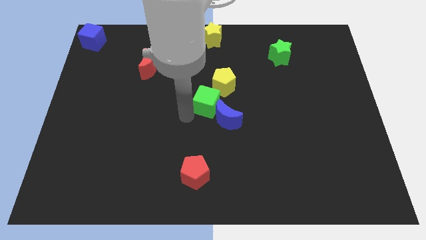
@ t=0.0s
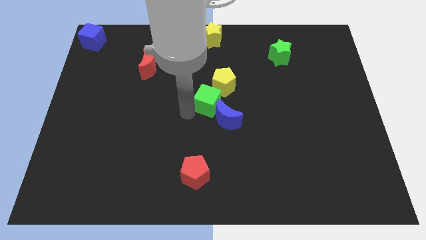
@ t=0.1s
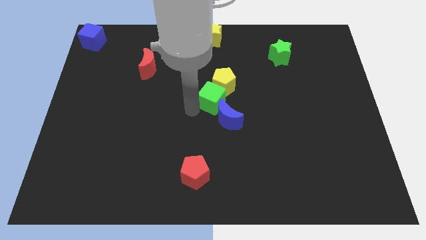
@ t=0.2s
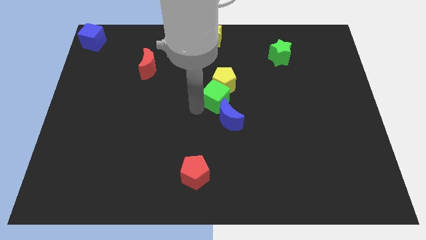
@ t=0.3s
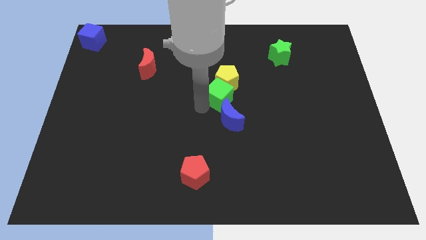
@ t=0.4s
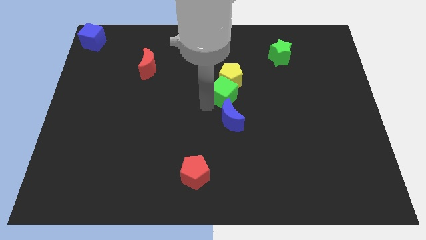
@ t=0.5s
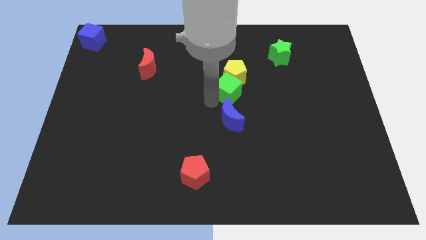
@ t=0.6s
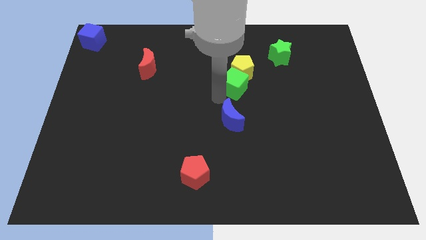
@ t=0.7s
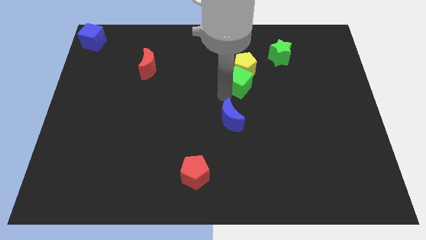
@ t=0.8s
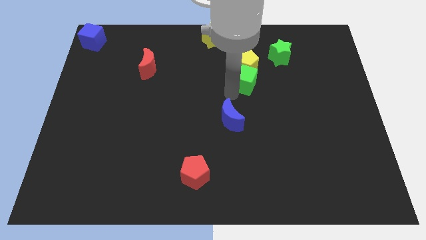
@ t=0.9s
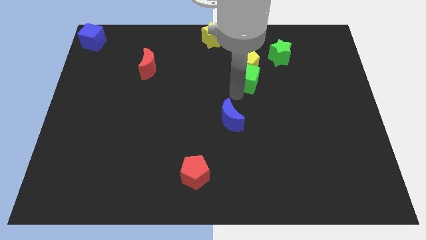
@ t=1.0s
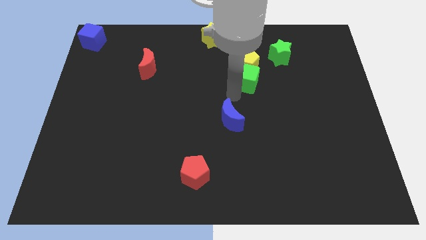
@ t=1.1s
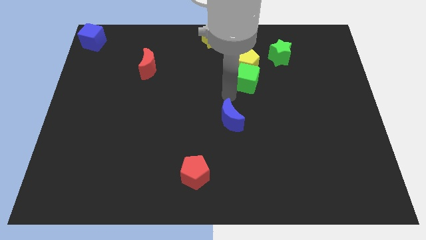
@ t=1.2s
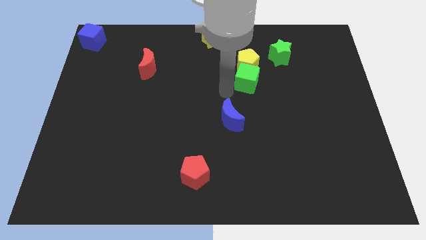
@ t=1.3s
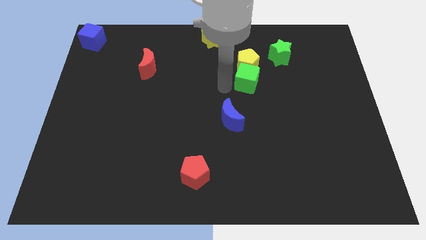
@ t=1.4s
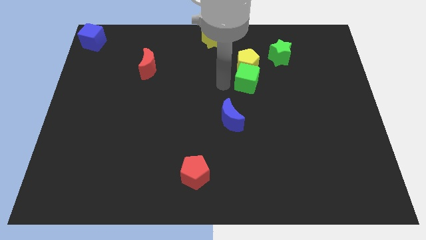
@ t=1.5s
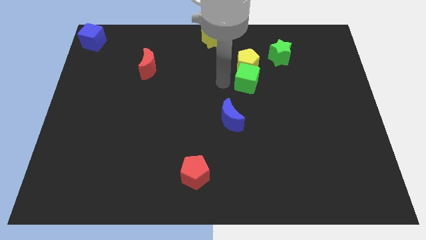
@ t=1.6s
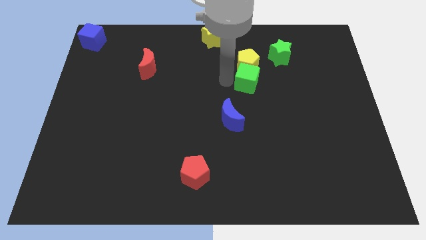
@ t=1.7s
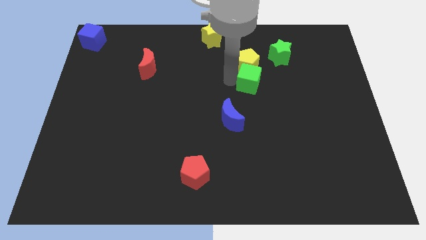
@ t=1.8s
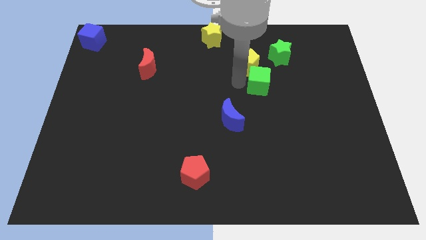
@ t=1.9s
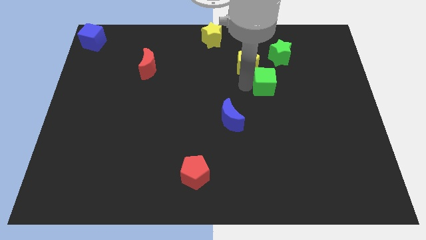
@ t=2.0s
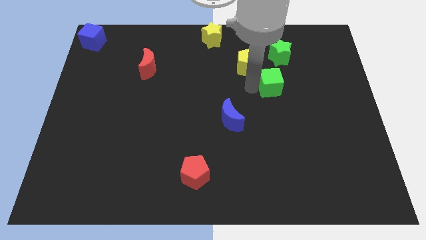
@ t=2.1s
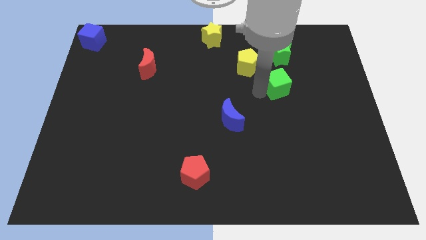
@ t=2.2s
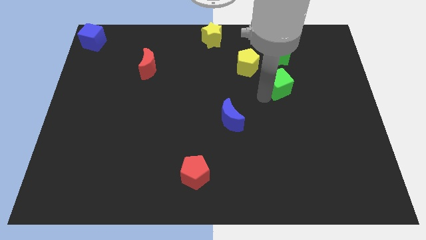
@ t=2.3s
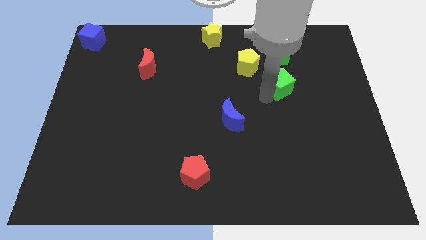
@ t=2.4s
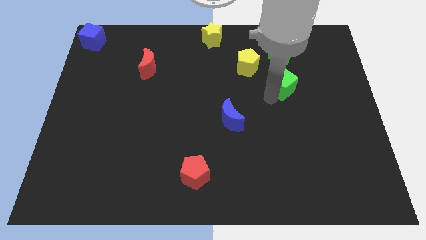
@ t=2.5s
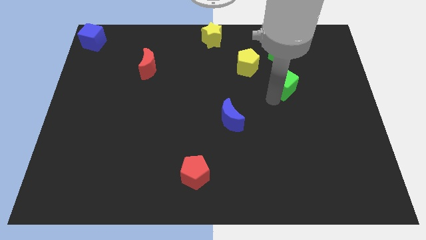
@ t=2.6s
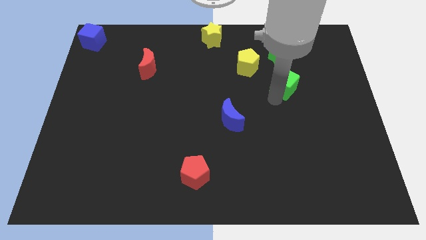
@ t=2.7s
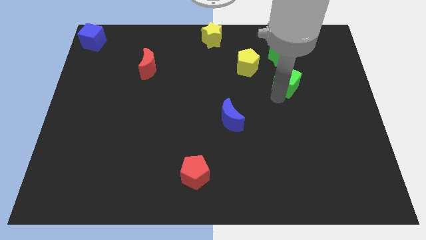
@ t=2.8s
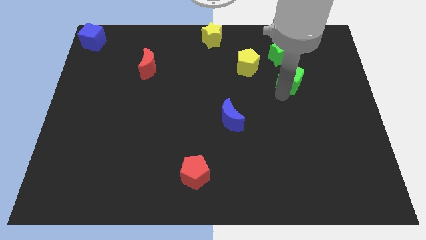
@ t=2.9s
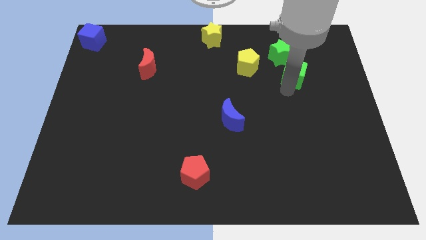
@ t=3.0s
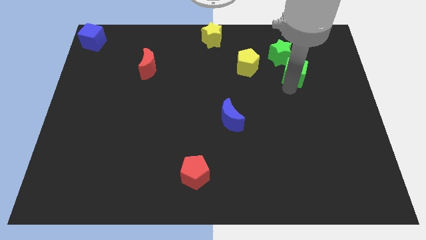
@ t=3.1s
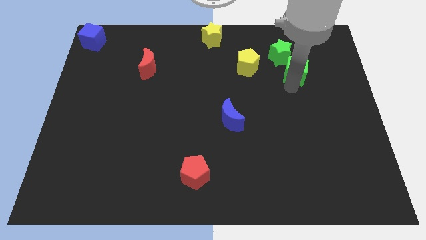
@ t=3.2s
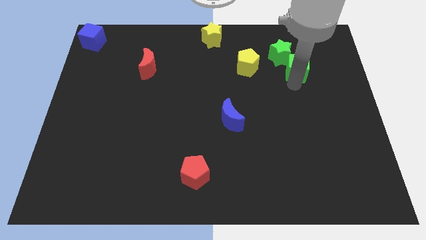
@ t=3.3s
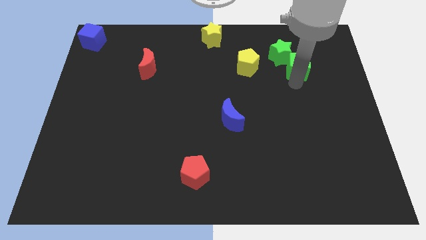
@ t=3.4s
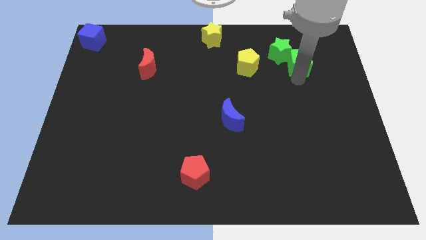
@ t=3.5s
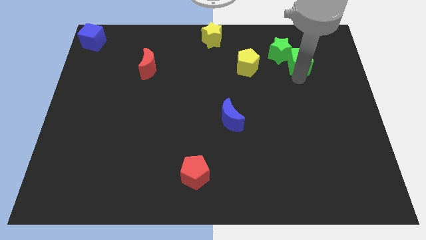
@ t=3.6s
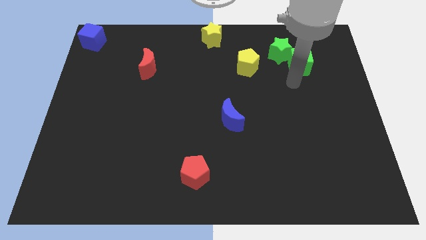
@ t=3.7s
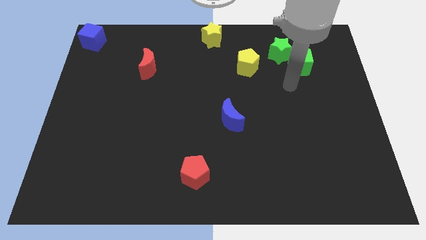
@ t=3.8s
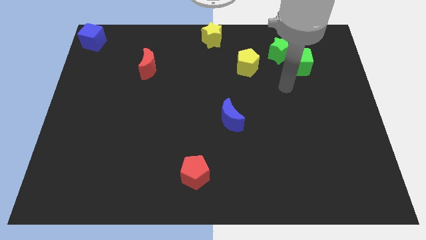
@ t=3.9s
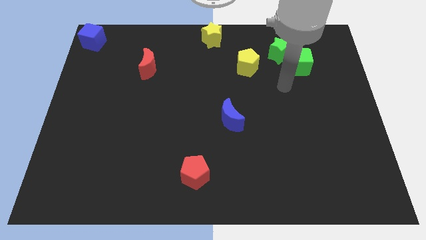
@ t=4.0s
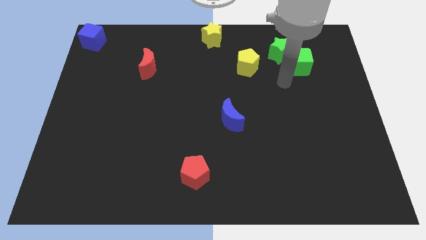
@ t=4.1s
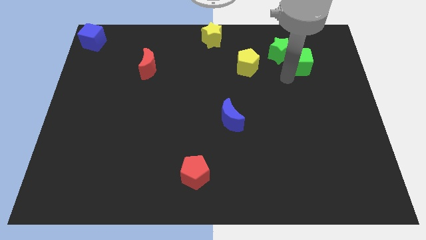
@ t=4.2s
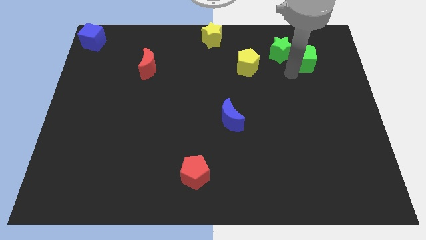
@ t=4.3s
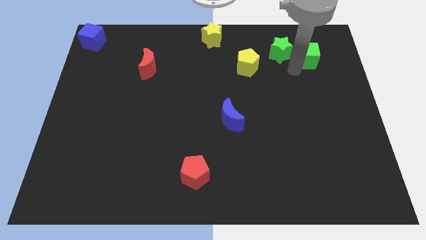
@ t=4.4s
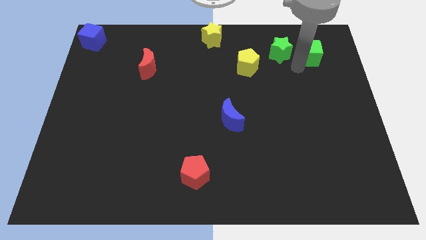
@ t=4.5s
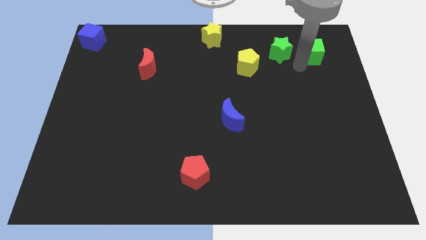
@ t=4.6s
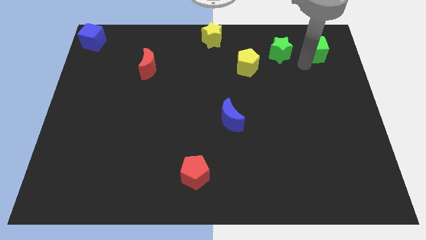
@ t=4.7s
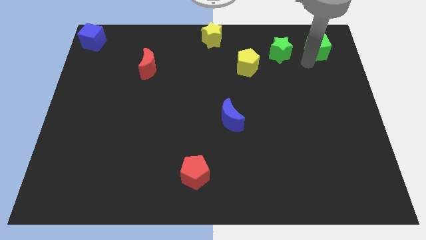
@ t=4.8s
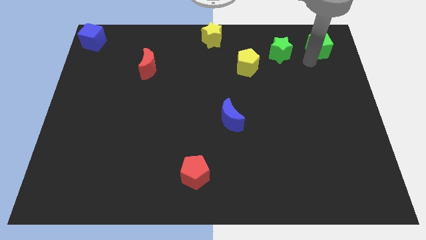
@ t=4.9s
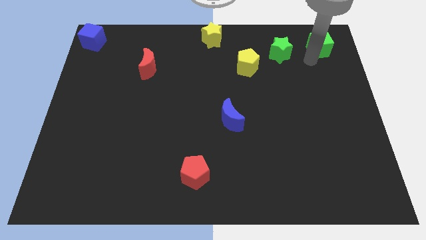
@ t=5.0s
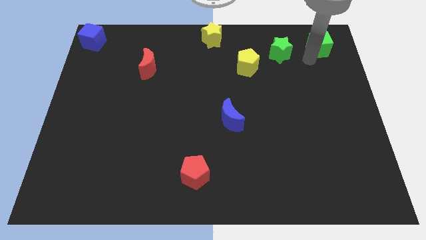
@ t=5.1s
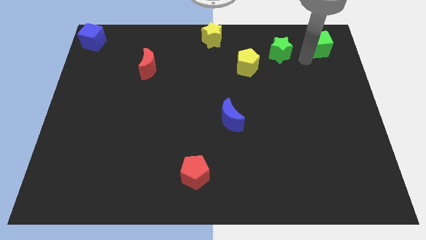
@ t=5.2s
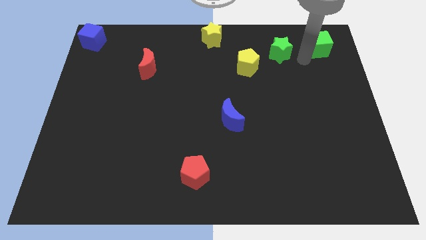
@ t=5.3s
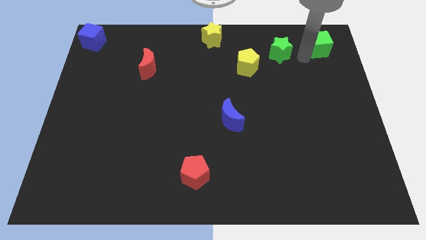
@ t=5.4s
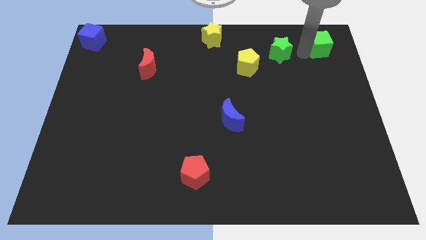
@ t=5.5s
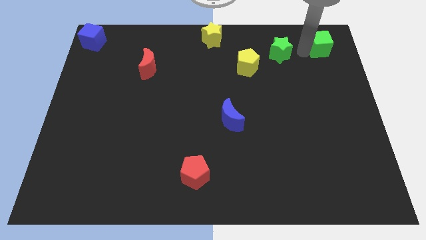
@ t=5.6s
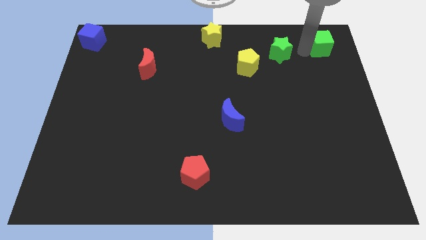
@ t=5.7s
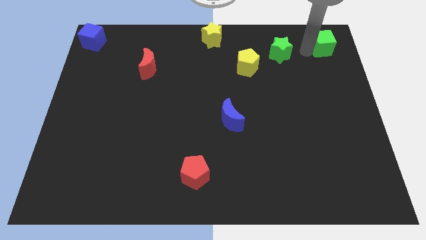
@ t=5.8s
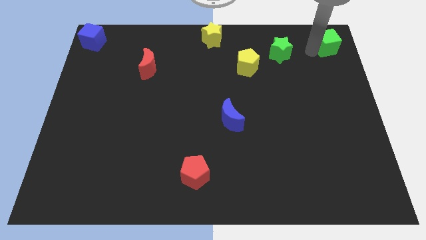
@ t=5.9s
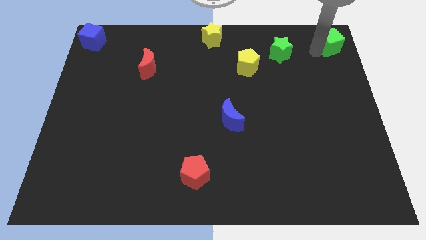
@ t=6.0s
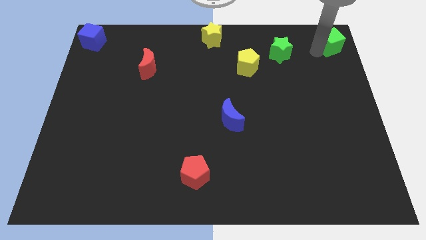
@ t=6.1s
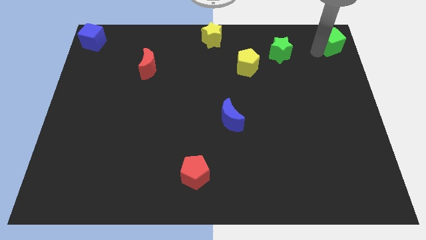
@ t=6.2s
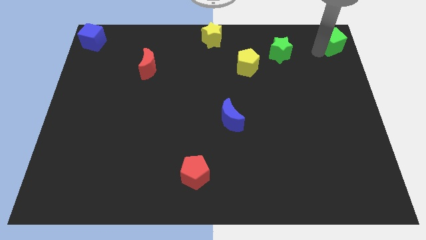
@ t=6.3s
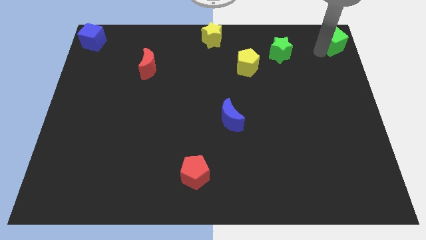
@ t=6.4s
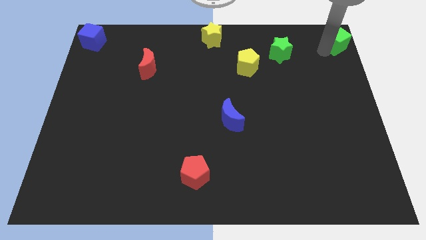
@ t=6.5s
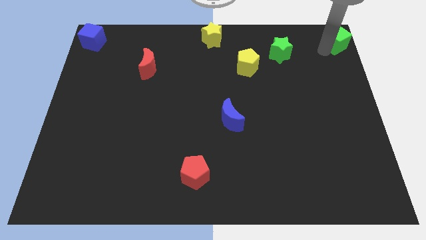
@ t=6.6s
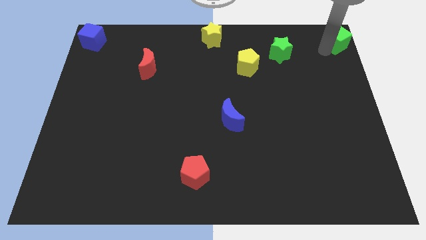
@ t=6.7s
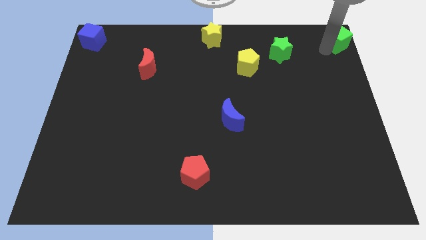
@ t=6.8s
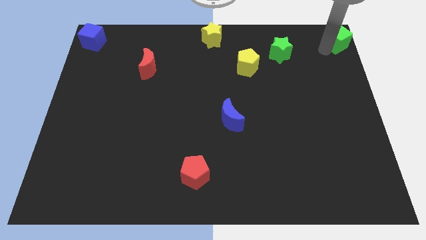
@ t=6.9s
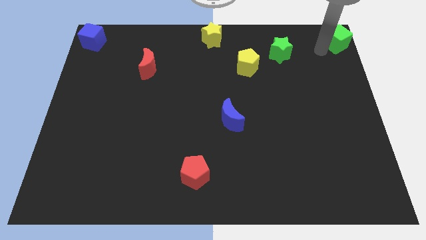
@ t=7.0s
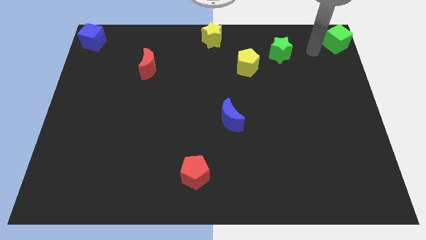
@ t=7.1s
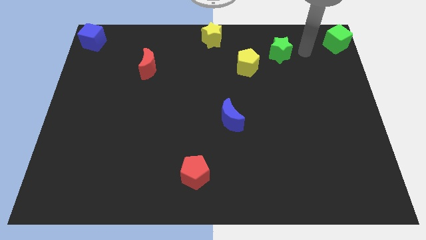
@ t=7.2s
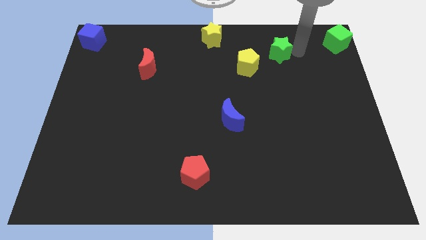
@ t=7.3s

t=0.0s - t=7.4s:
move the green cube to top right corner

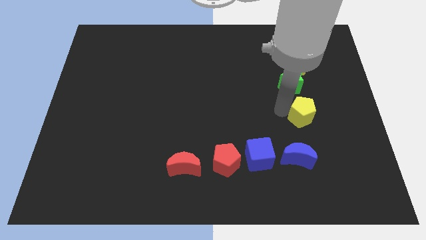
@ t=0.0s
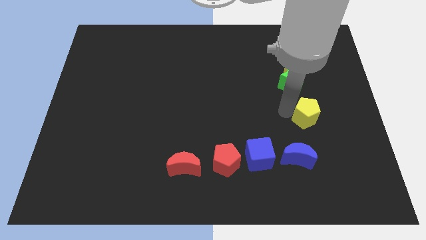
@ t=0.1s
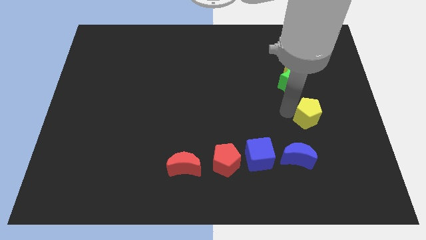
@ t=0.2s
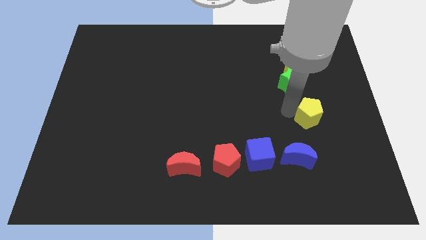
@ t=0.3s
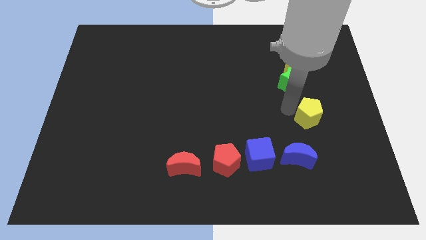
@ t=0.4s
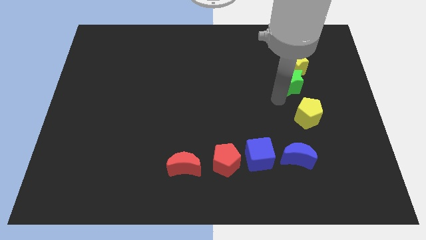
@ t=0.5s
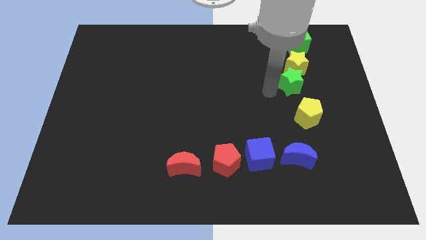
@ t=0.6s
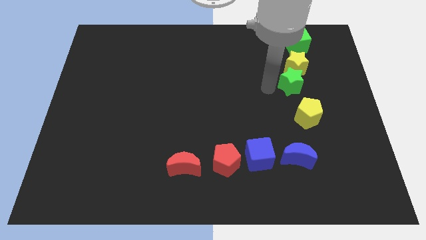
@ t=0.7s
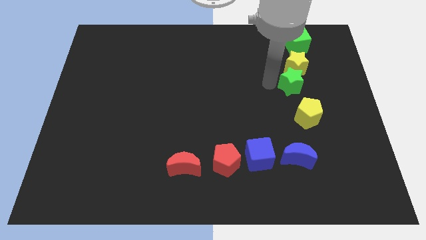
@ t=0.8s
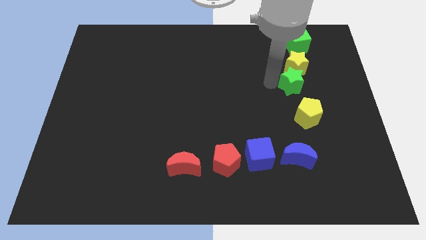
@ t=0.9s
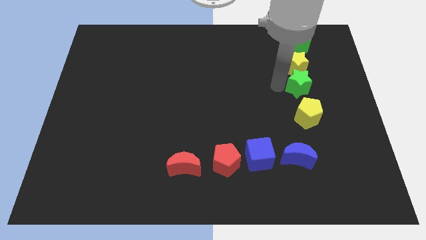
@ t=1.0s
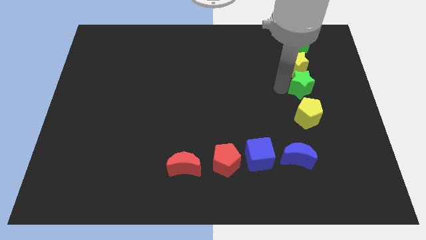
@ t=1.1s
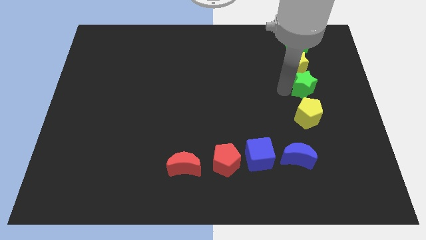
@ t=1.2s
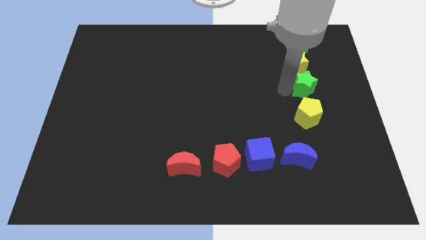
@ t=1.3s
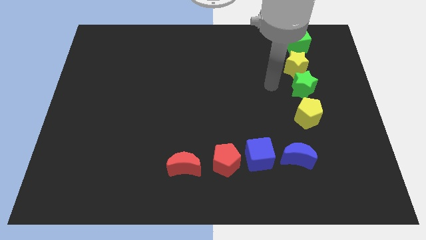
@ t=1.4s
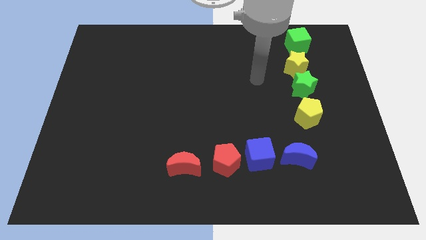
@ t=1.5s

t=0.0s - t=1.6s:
make a vertical line with the green star yellow pentagon yellow star and green cube
